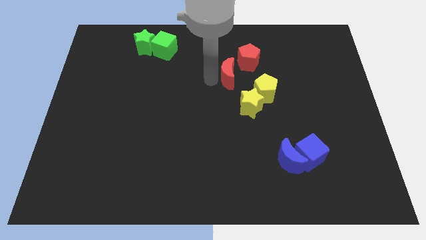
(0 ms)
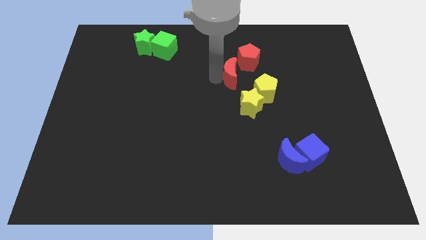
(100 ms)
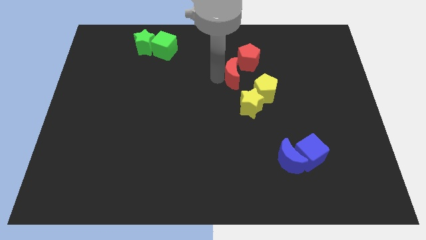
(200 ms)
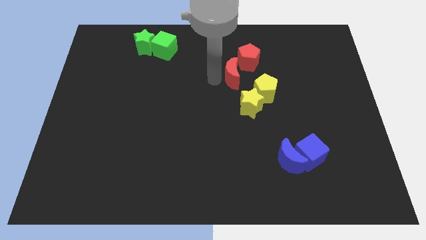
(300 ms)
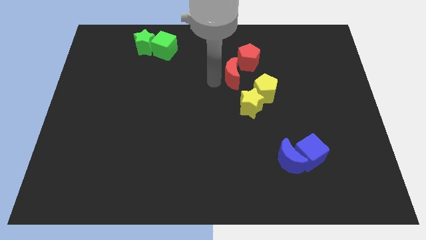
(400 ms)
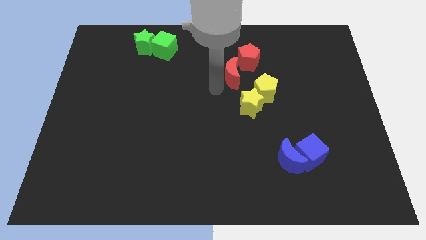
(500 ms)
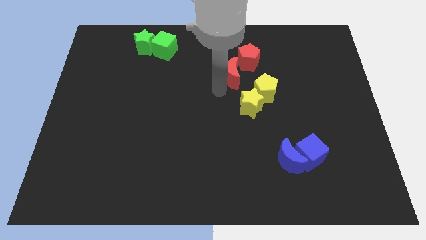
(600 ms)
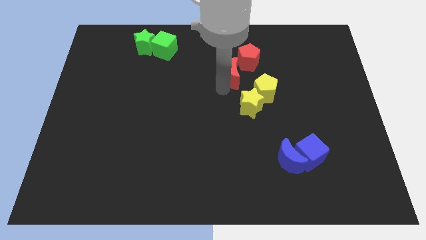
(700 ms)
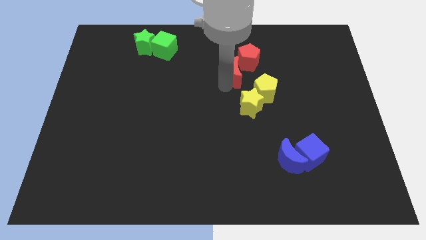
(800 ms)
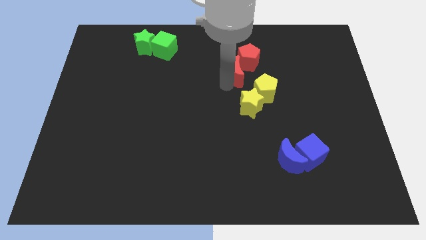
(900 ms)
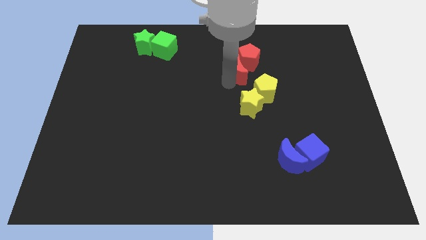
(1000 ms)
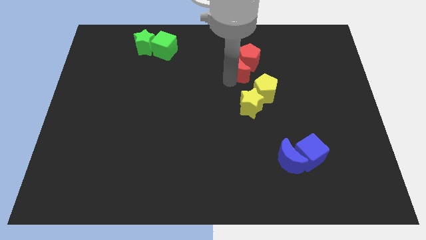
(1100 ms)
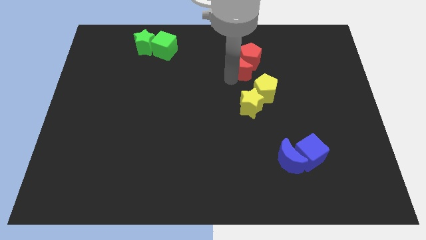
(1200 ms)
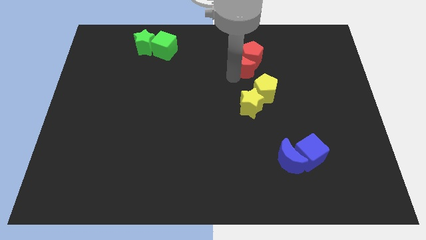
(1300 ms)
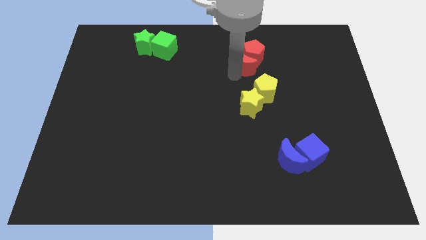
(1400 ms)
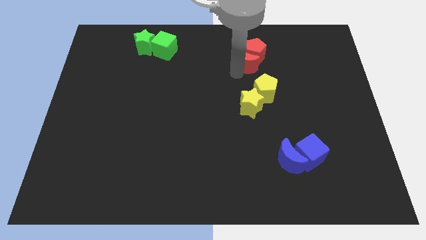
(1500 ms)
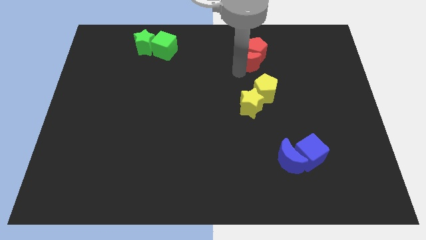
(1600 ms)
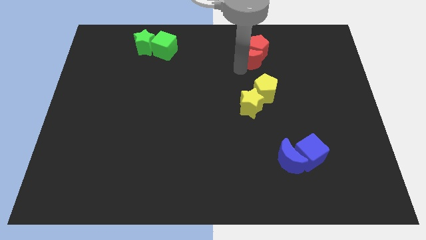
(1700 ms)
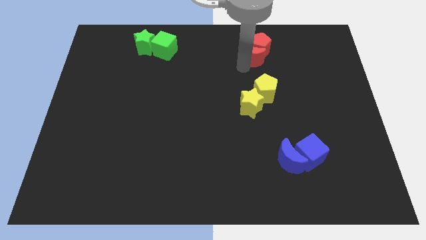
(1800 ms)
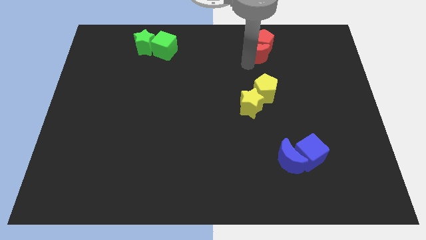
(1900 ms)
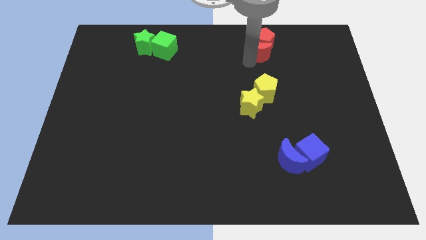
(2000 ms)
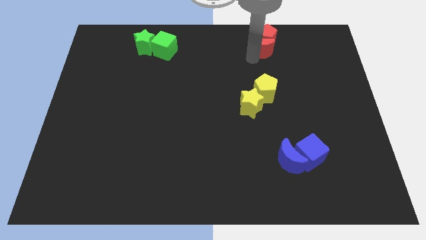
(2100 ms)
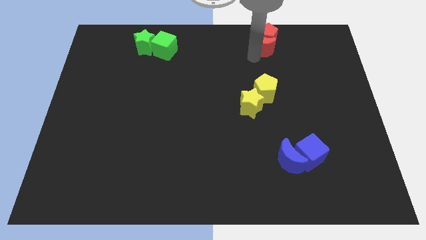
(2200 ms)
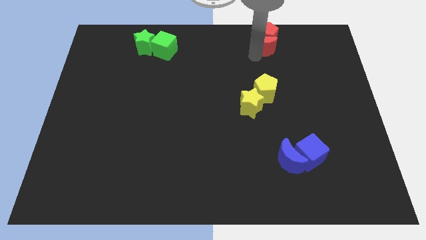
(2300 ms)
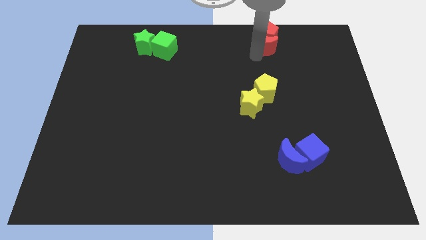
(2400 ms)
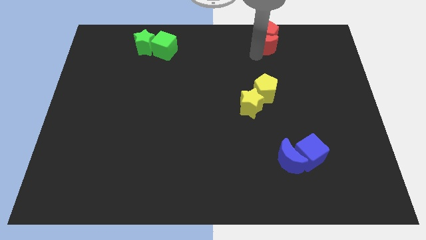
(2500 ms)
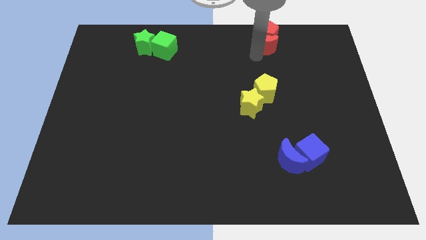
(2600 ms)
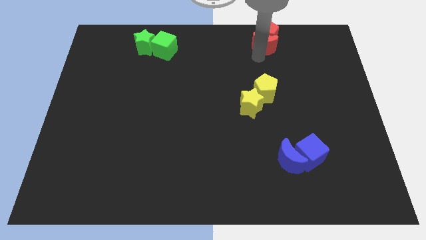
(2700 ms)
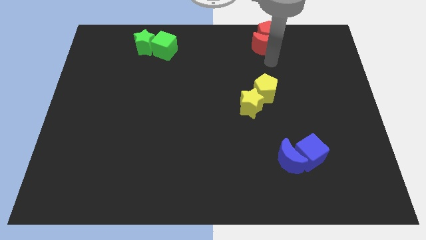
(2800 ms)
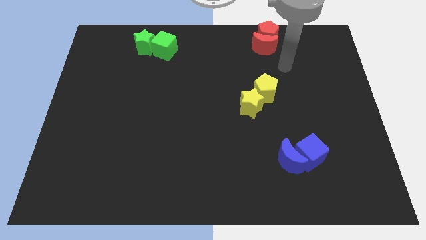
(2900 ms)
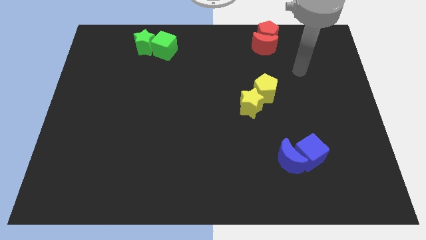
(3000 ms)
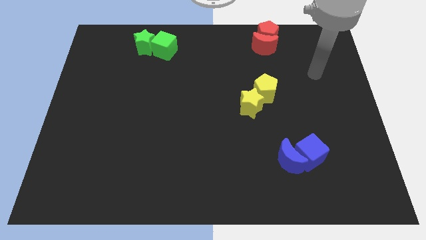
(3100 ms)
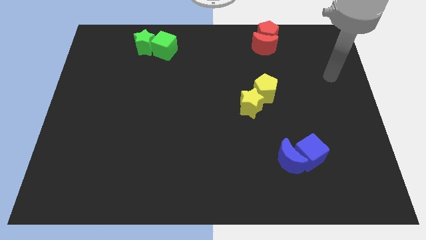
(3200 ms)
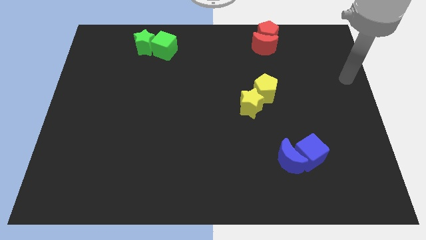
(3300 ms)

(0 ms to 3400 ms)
move the red crescent along with red pentagon to the top center of the board

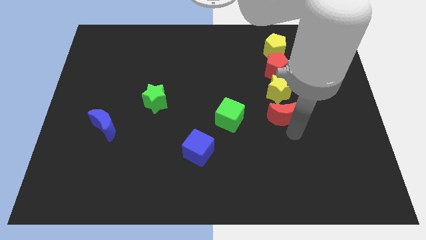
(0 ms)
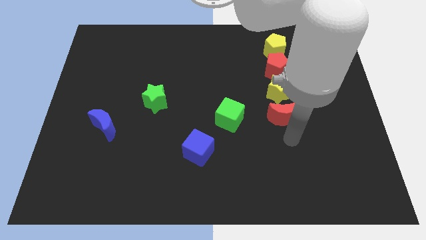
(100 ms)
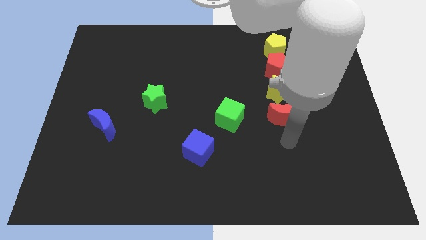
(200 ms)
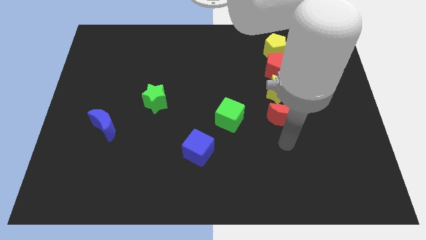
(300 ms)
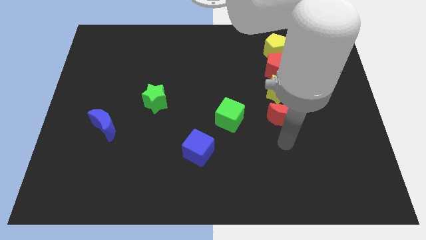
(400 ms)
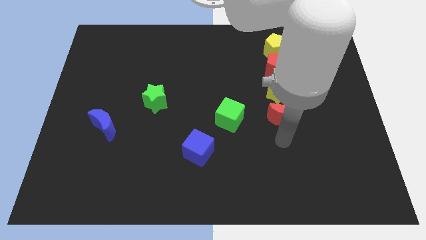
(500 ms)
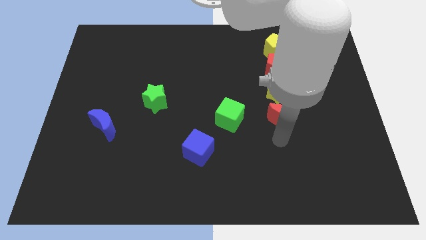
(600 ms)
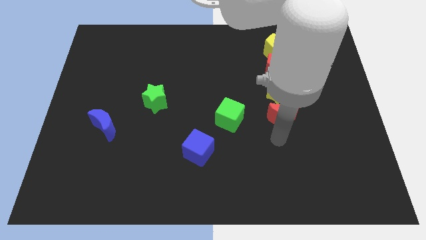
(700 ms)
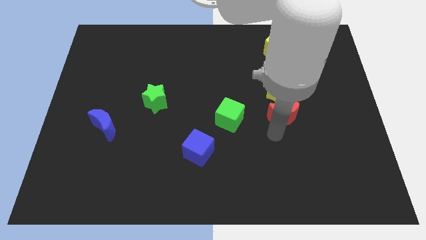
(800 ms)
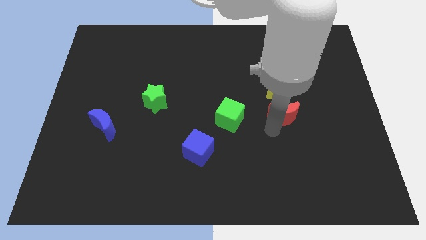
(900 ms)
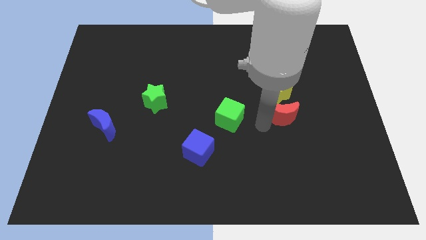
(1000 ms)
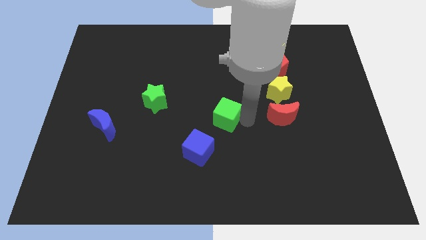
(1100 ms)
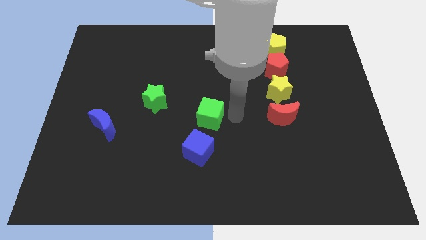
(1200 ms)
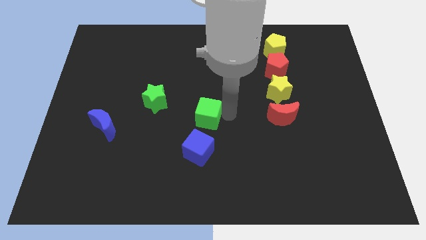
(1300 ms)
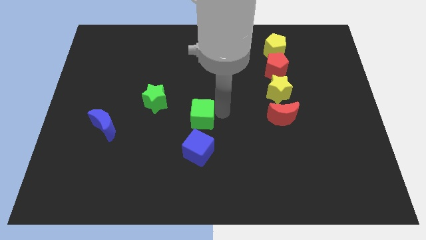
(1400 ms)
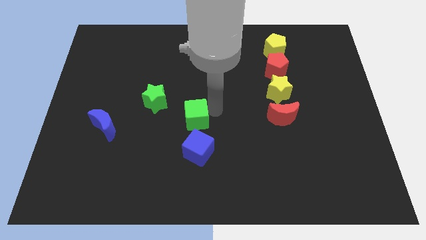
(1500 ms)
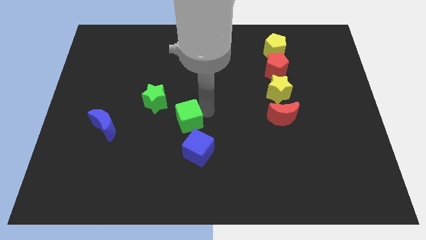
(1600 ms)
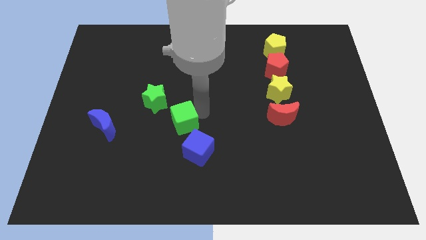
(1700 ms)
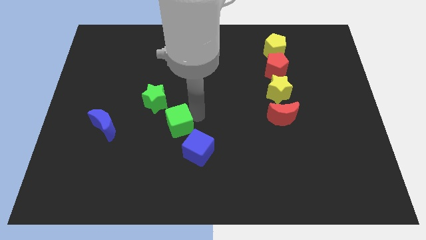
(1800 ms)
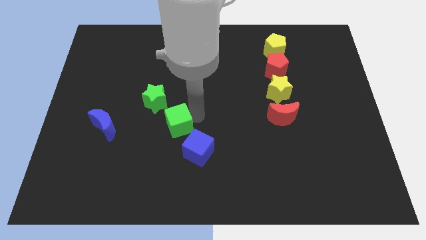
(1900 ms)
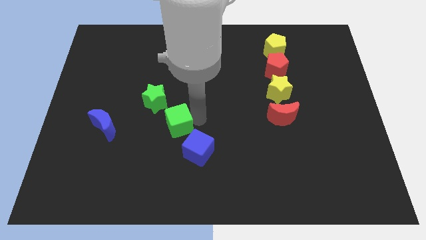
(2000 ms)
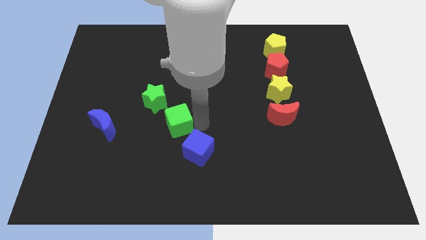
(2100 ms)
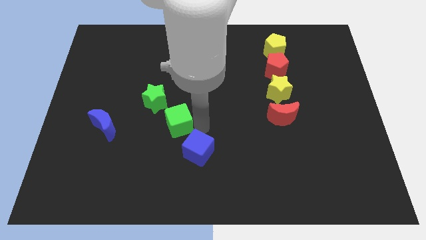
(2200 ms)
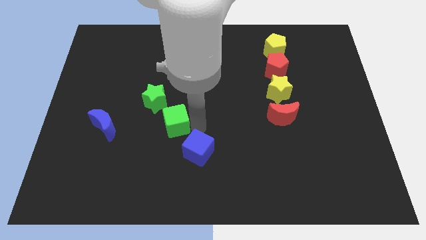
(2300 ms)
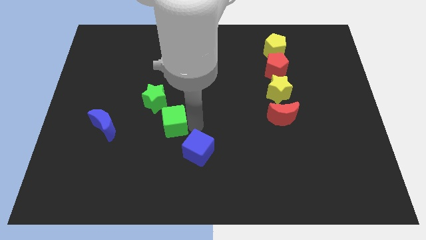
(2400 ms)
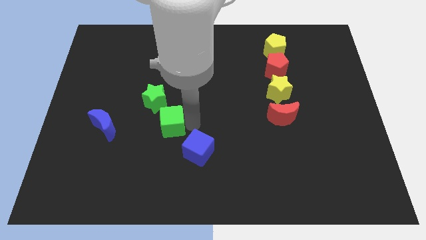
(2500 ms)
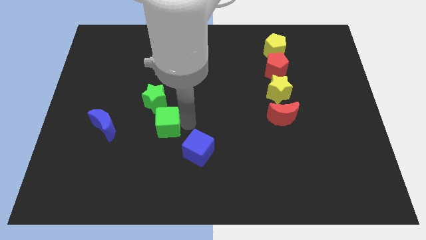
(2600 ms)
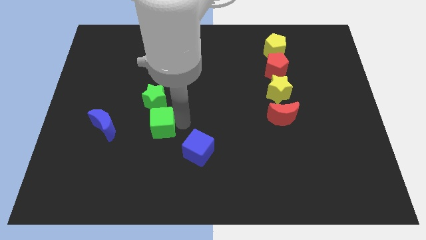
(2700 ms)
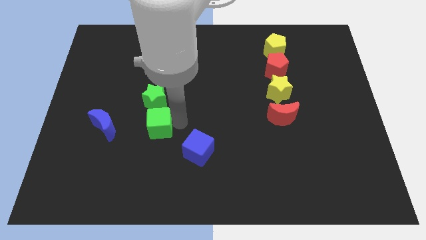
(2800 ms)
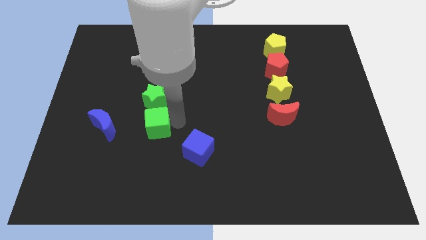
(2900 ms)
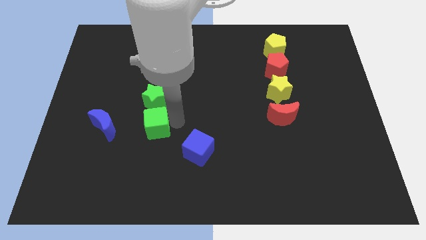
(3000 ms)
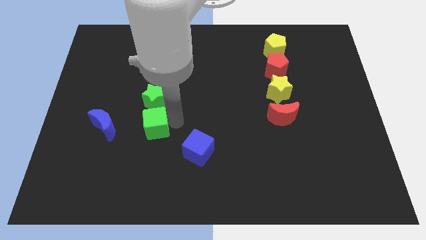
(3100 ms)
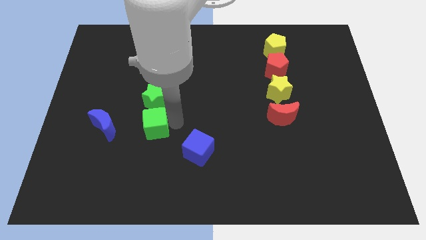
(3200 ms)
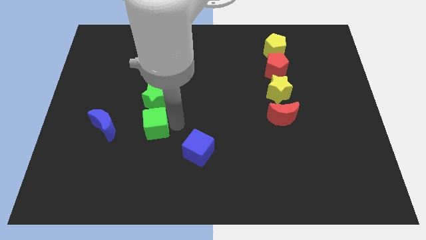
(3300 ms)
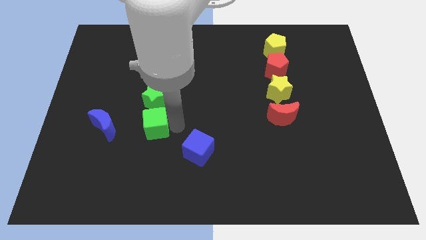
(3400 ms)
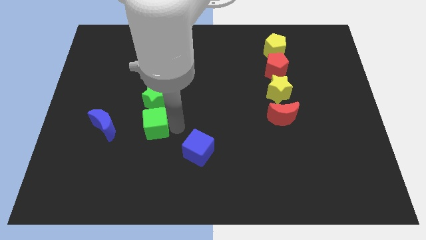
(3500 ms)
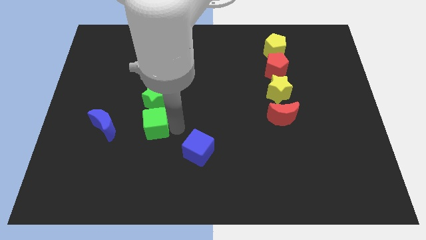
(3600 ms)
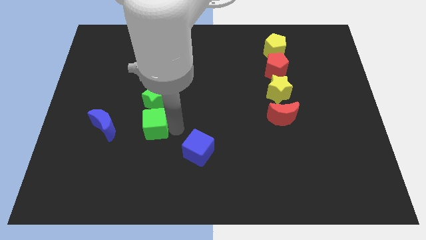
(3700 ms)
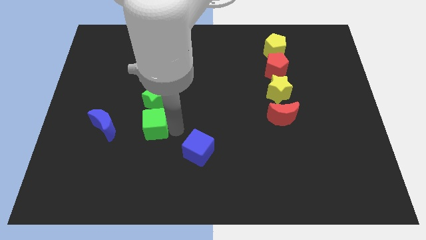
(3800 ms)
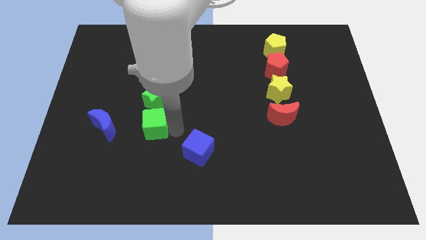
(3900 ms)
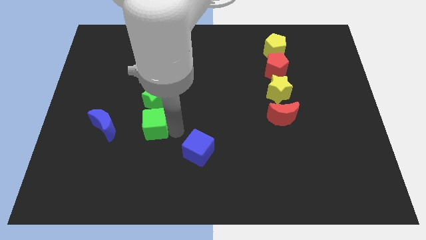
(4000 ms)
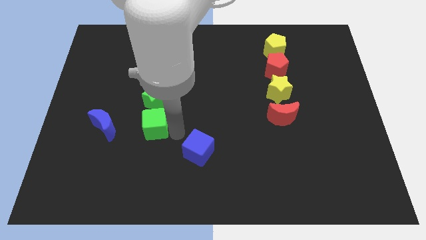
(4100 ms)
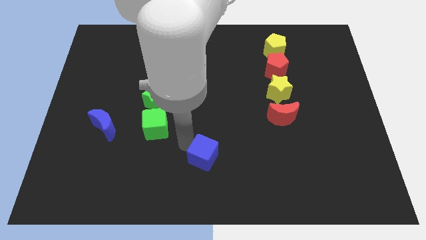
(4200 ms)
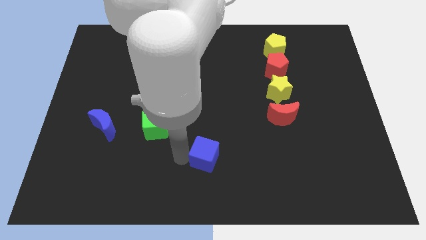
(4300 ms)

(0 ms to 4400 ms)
place the green cube below to the green star

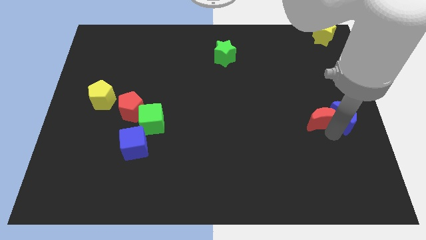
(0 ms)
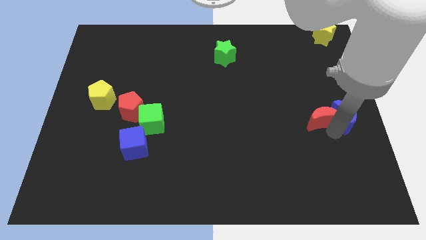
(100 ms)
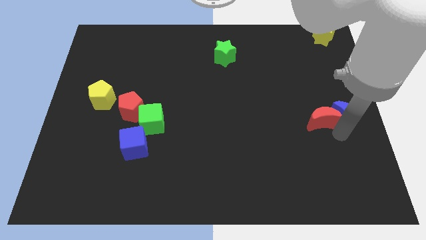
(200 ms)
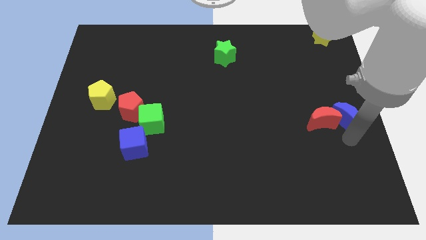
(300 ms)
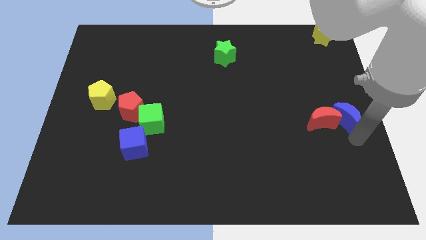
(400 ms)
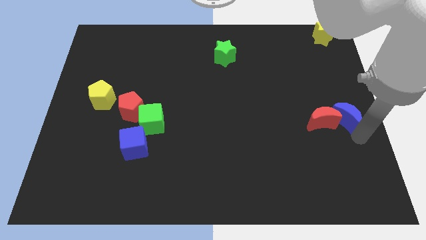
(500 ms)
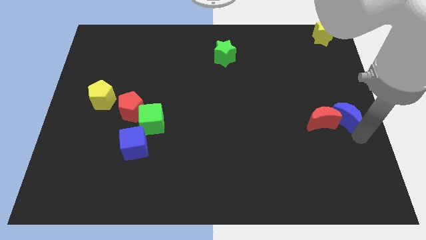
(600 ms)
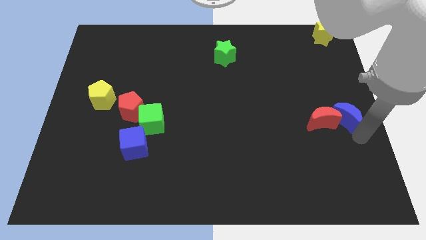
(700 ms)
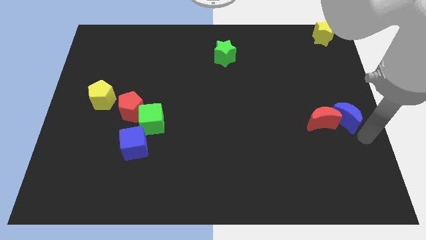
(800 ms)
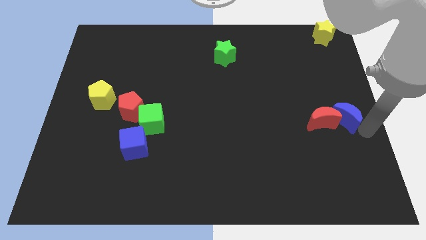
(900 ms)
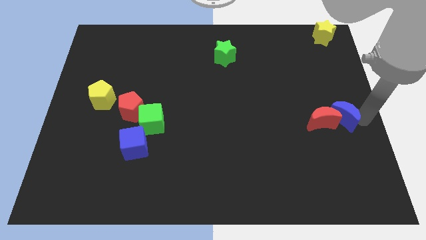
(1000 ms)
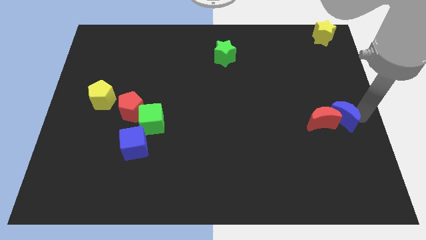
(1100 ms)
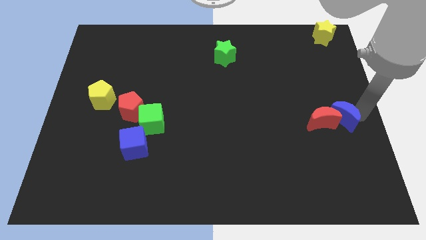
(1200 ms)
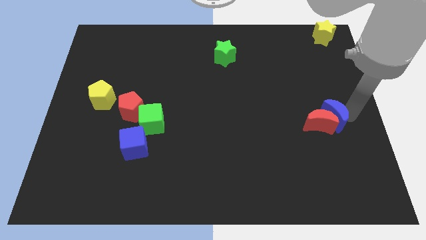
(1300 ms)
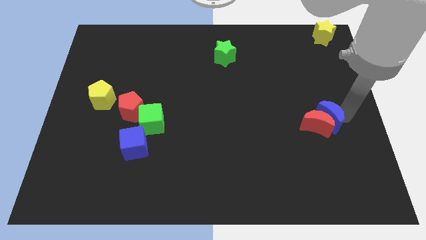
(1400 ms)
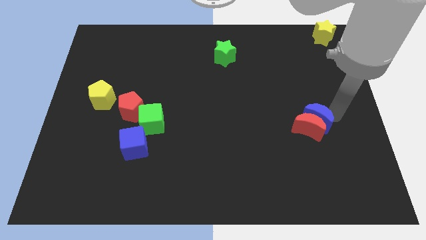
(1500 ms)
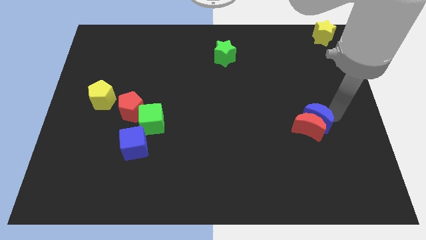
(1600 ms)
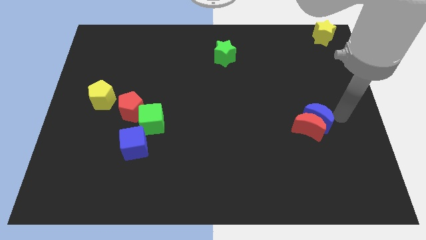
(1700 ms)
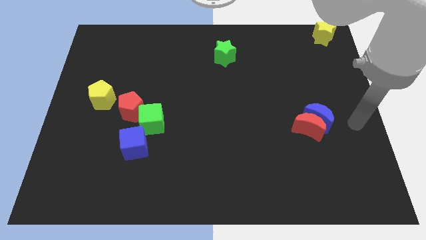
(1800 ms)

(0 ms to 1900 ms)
move the red moon and blue moon to the center
